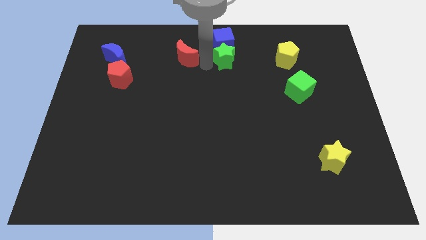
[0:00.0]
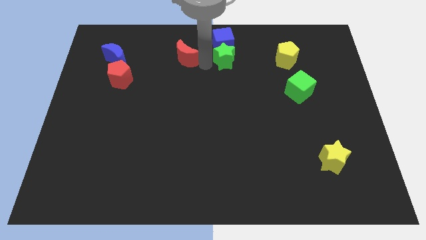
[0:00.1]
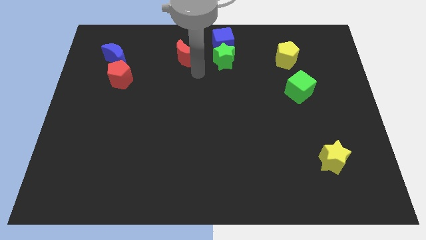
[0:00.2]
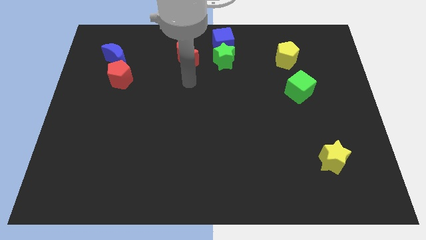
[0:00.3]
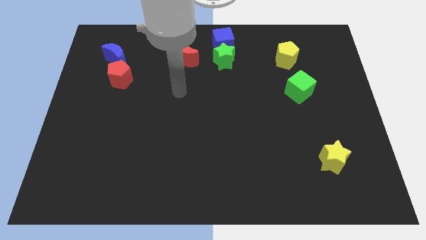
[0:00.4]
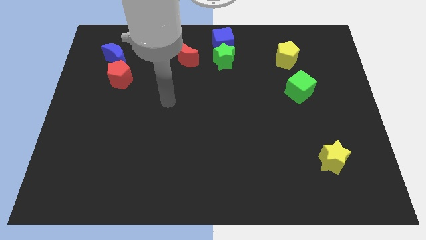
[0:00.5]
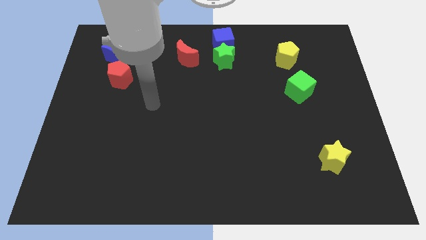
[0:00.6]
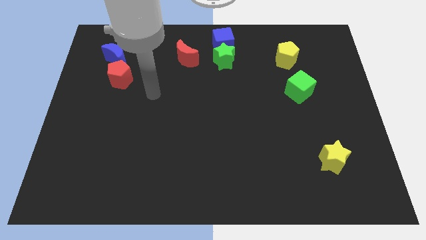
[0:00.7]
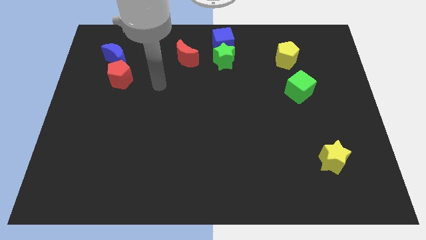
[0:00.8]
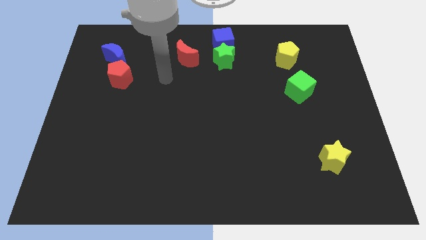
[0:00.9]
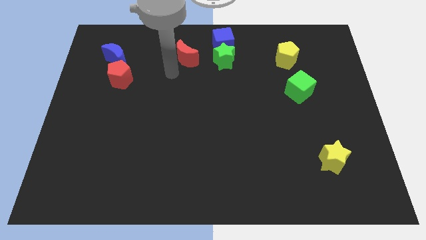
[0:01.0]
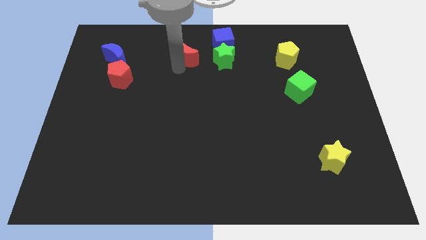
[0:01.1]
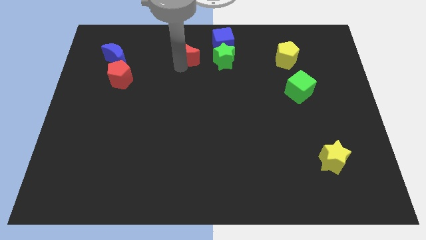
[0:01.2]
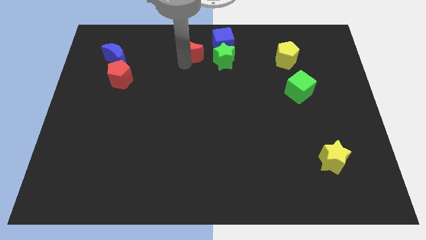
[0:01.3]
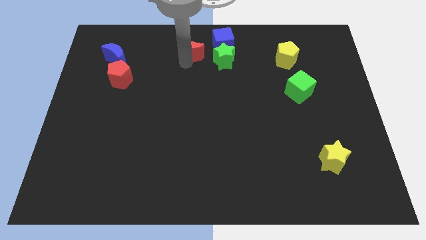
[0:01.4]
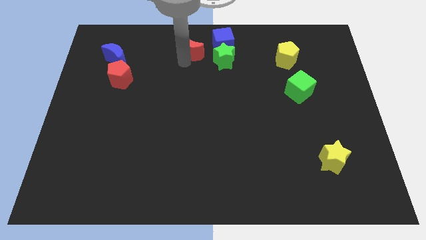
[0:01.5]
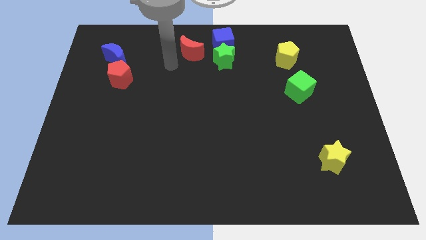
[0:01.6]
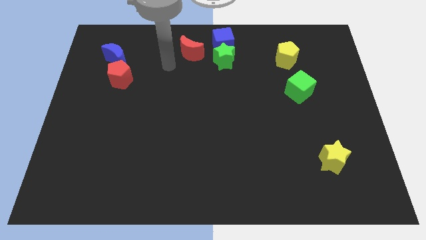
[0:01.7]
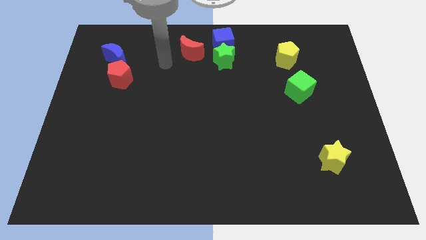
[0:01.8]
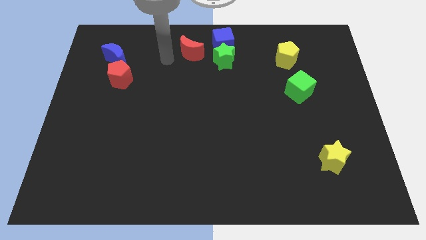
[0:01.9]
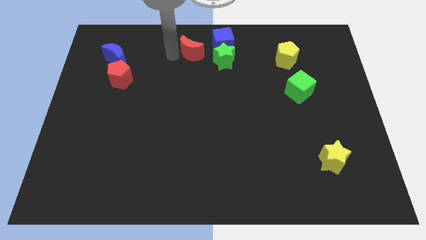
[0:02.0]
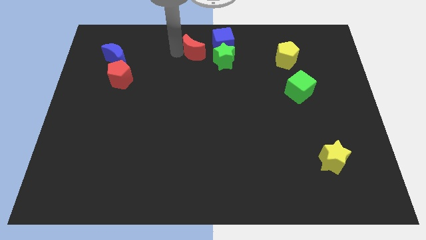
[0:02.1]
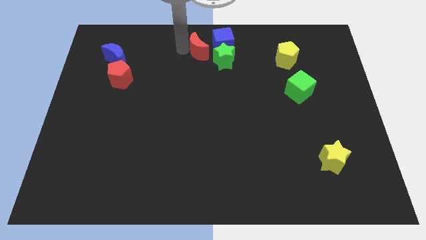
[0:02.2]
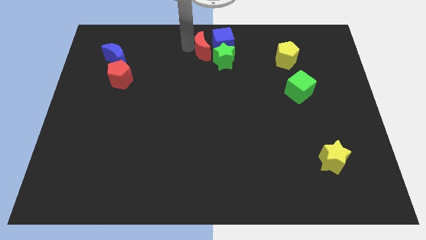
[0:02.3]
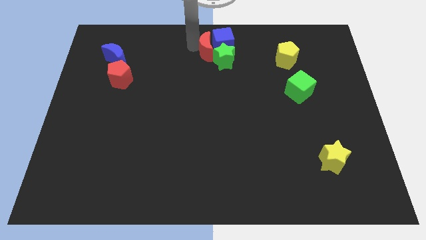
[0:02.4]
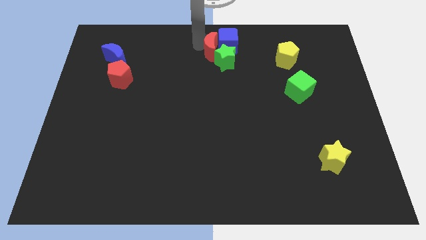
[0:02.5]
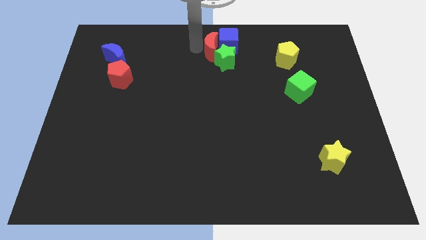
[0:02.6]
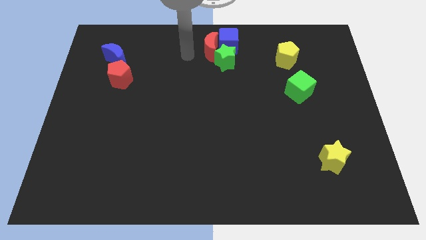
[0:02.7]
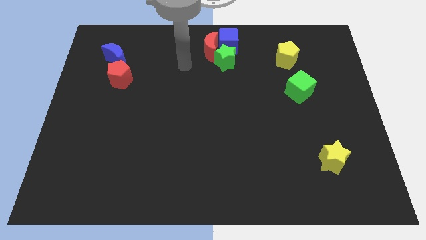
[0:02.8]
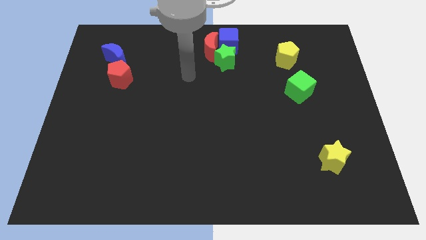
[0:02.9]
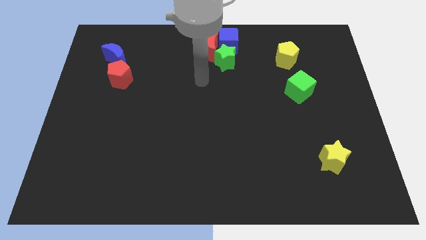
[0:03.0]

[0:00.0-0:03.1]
move red moon to the left of blue cube

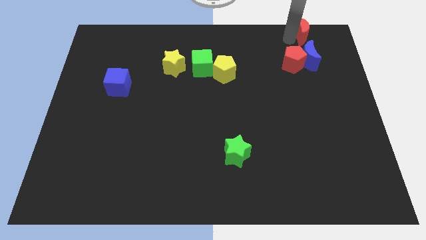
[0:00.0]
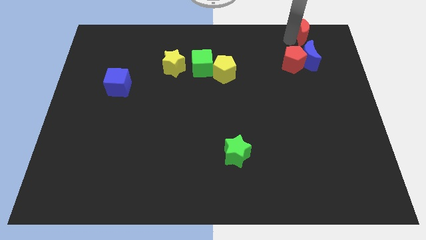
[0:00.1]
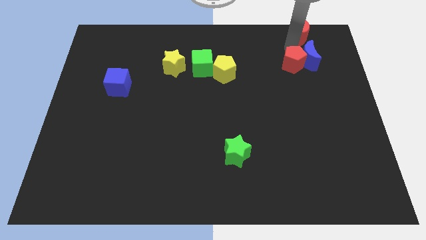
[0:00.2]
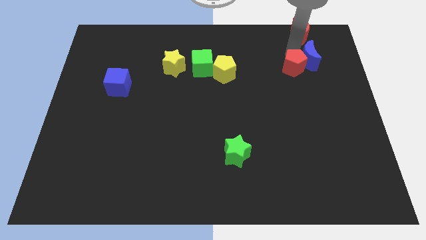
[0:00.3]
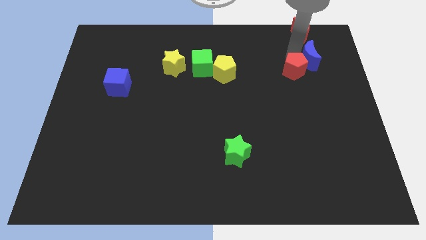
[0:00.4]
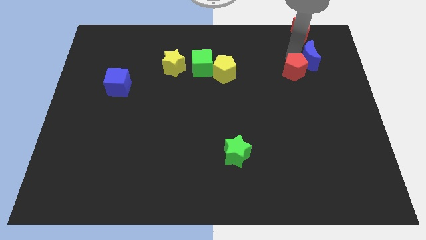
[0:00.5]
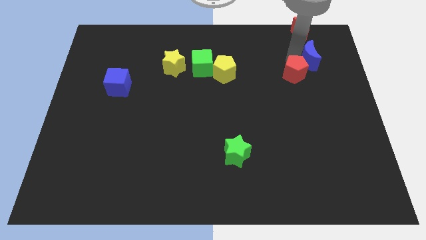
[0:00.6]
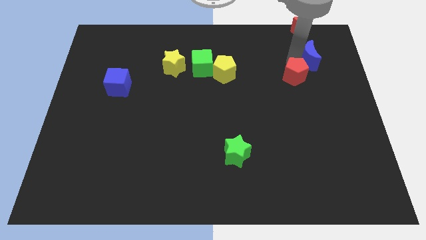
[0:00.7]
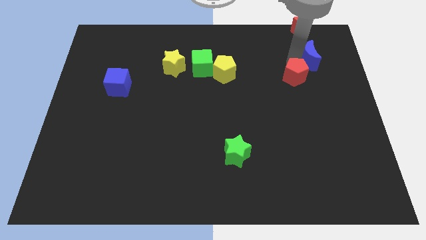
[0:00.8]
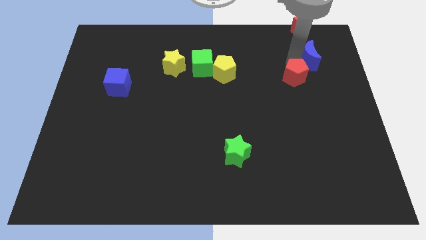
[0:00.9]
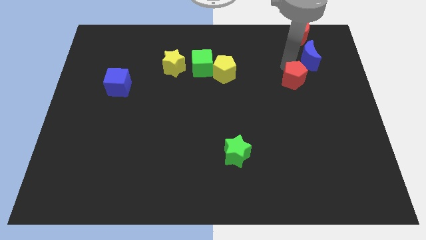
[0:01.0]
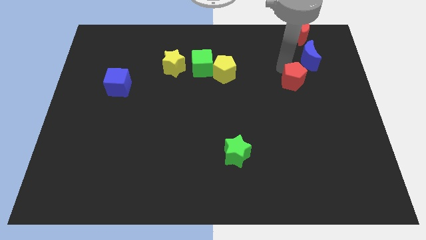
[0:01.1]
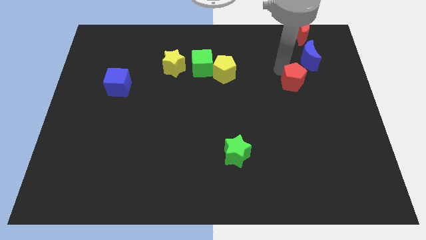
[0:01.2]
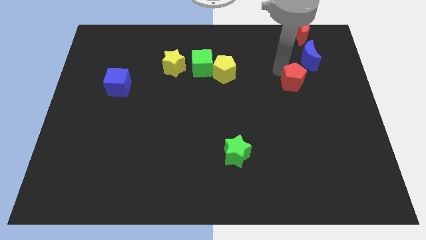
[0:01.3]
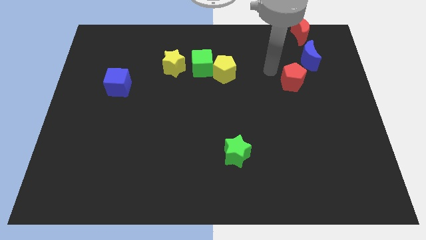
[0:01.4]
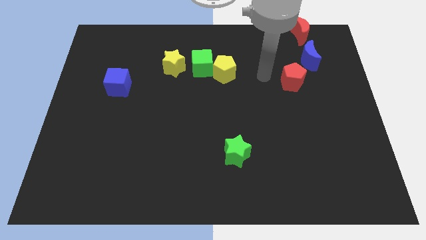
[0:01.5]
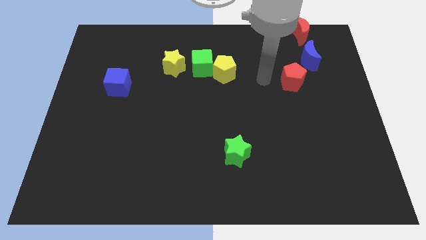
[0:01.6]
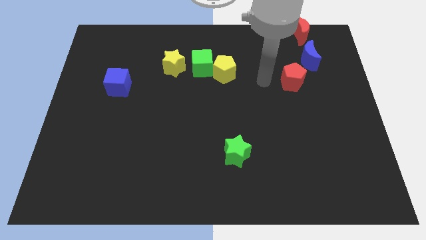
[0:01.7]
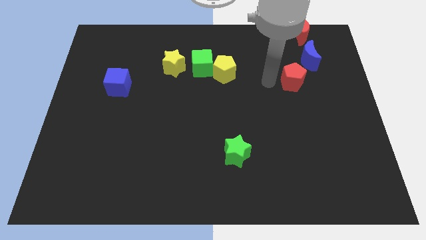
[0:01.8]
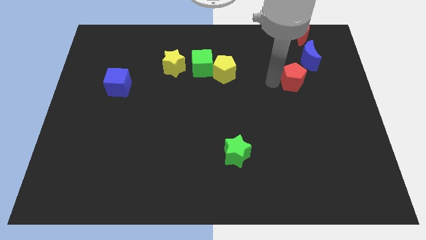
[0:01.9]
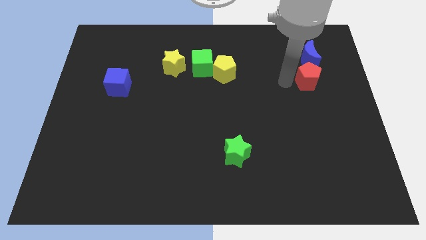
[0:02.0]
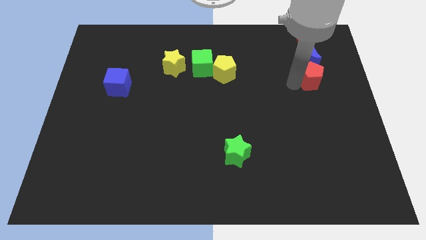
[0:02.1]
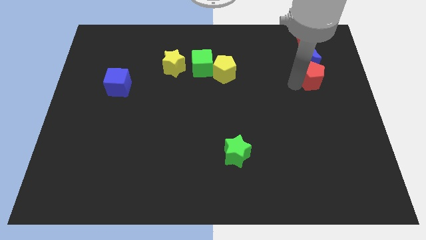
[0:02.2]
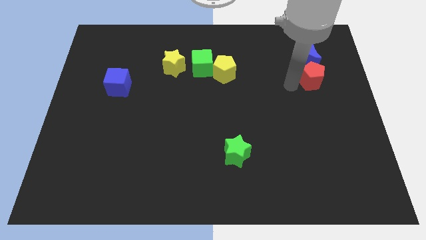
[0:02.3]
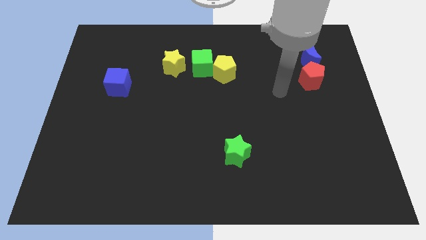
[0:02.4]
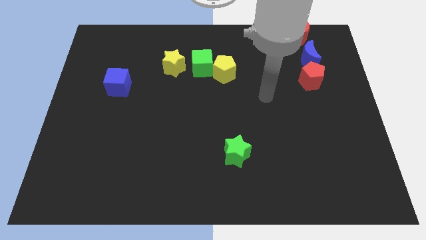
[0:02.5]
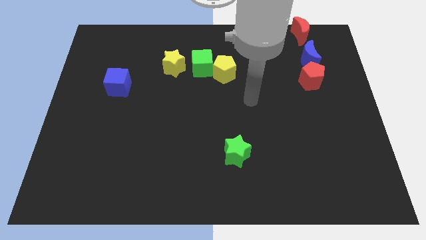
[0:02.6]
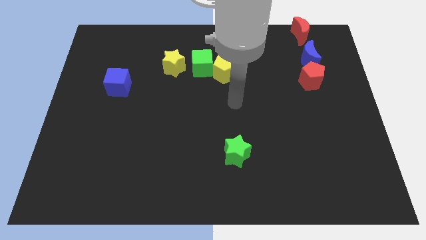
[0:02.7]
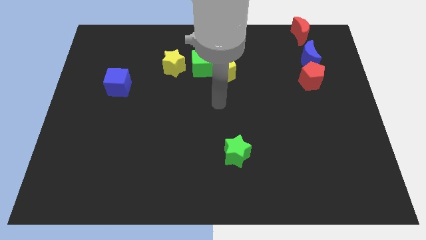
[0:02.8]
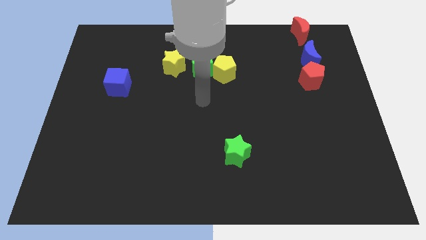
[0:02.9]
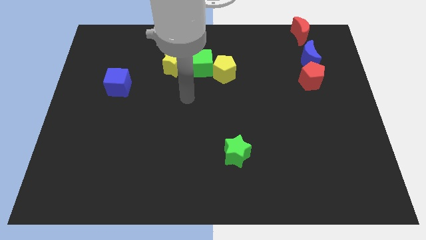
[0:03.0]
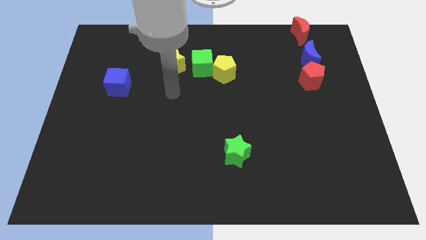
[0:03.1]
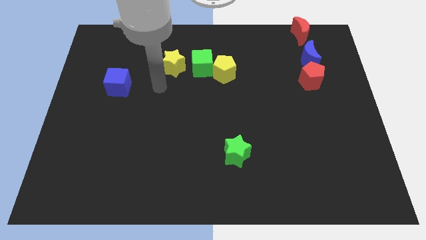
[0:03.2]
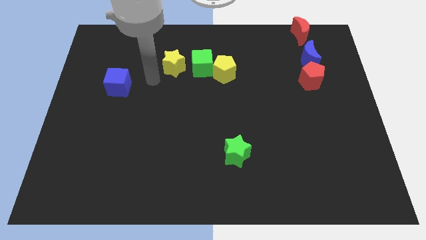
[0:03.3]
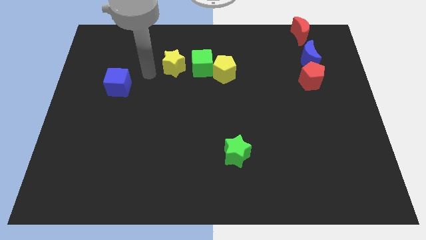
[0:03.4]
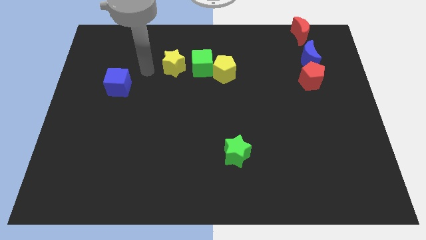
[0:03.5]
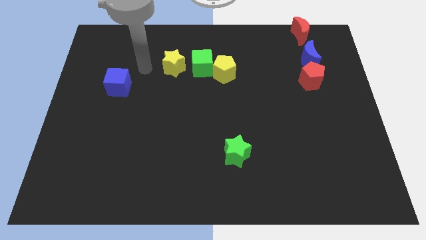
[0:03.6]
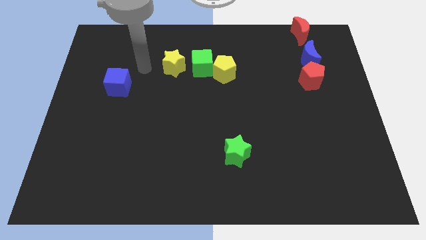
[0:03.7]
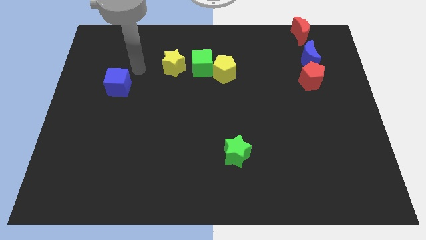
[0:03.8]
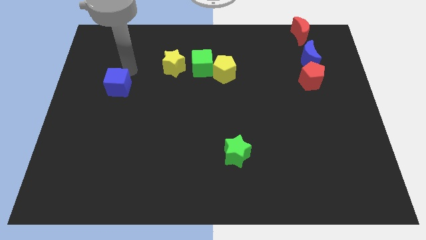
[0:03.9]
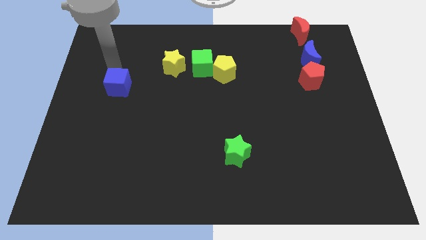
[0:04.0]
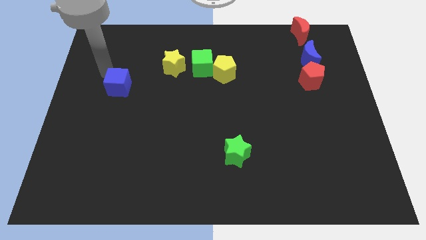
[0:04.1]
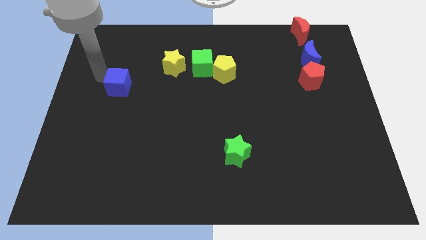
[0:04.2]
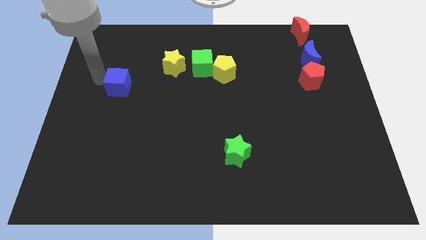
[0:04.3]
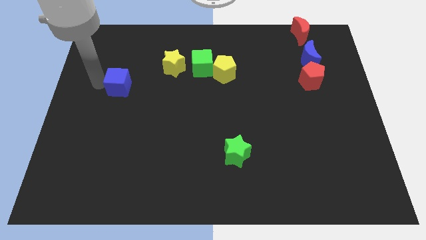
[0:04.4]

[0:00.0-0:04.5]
move the red pentagon below the blue moon

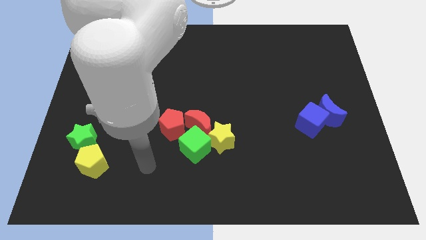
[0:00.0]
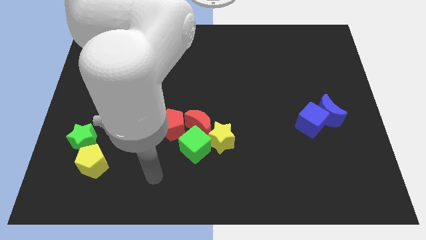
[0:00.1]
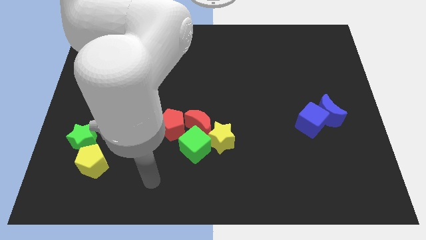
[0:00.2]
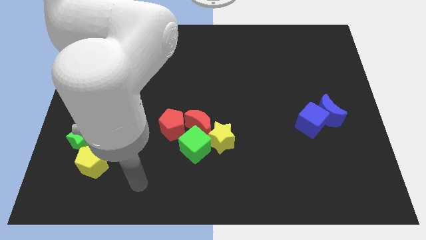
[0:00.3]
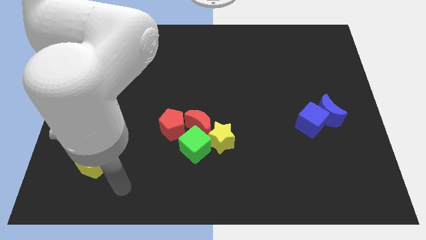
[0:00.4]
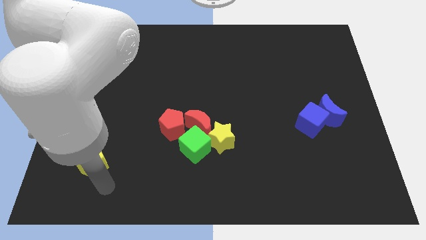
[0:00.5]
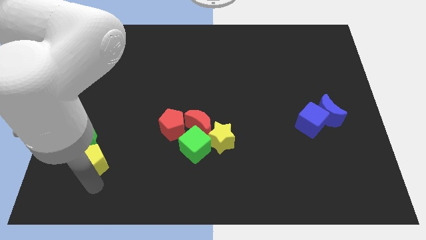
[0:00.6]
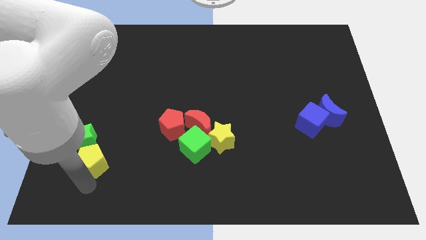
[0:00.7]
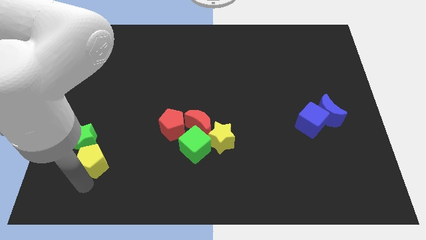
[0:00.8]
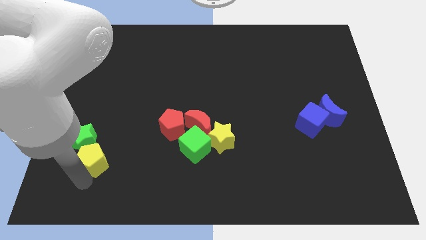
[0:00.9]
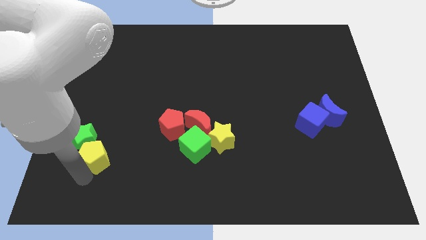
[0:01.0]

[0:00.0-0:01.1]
touch the bottom of yellow pentagon

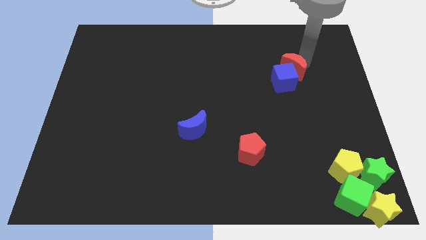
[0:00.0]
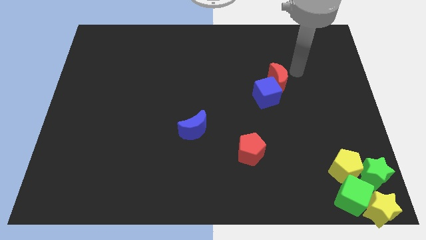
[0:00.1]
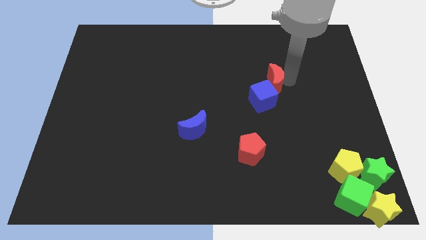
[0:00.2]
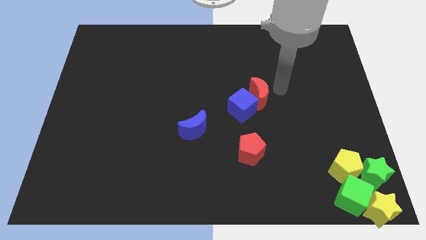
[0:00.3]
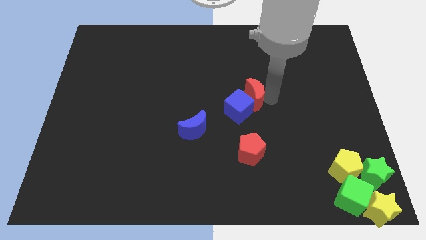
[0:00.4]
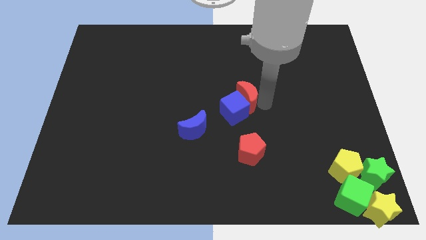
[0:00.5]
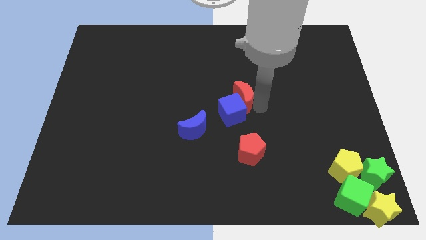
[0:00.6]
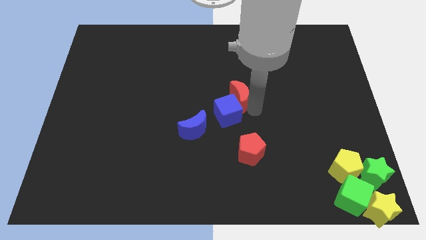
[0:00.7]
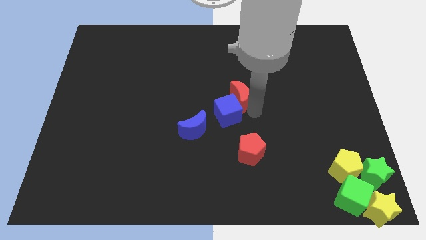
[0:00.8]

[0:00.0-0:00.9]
push the red crescent and the blue cube to the center
